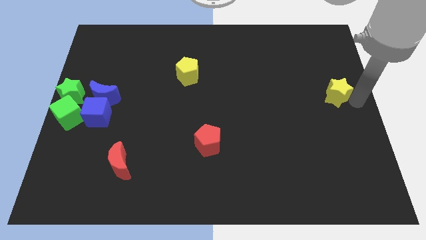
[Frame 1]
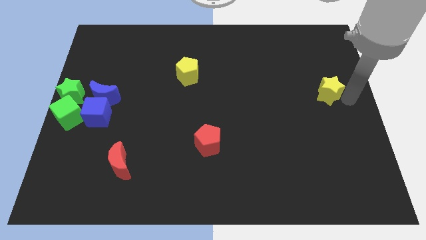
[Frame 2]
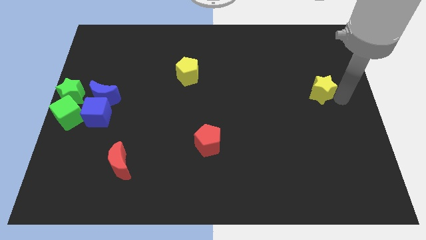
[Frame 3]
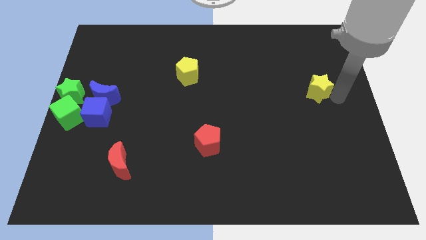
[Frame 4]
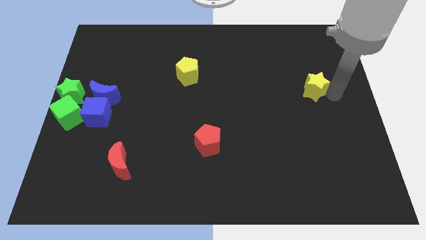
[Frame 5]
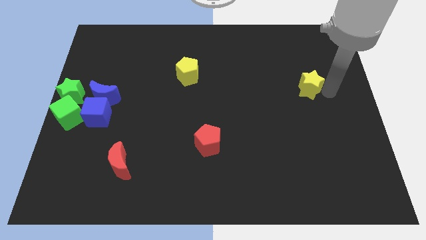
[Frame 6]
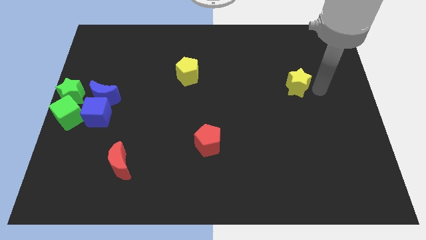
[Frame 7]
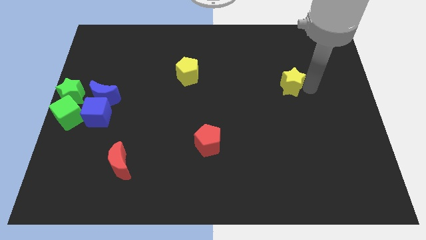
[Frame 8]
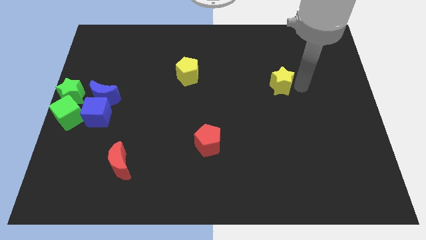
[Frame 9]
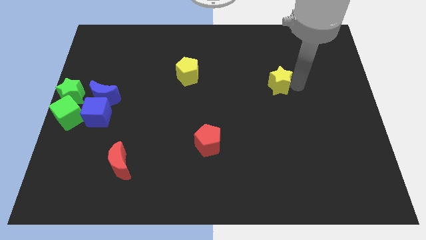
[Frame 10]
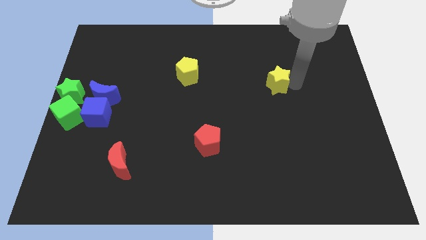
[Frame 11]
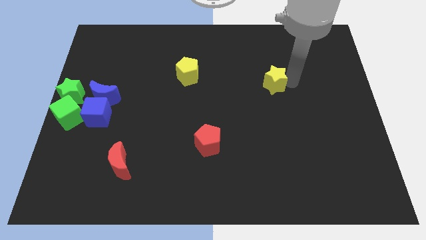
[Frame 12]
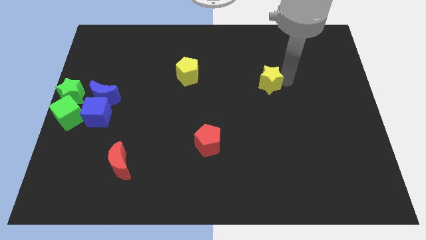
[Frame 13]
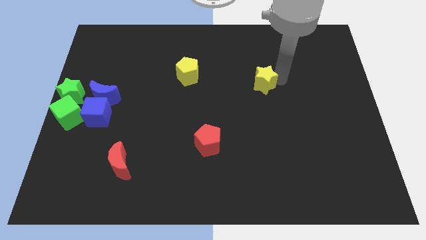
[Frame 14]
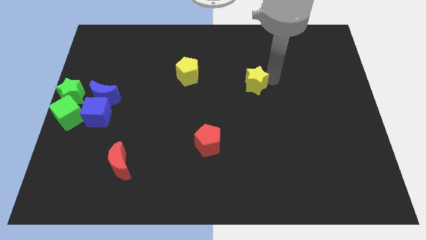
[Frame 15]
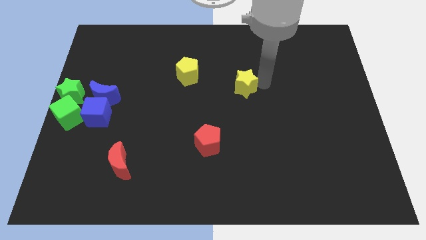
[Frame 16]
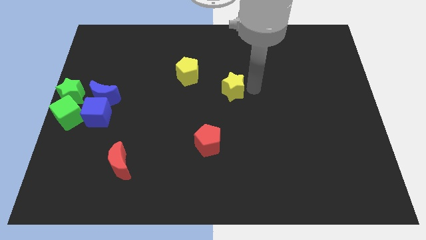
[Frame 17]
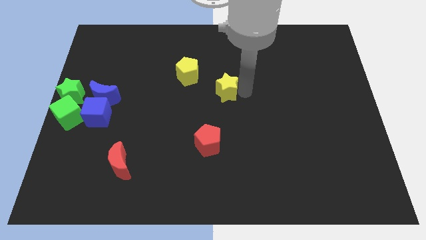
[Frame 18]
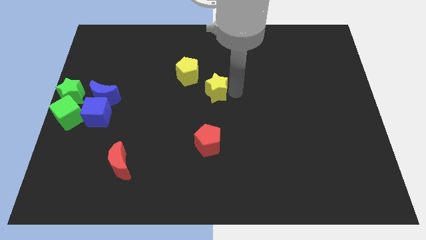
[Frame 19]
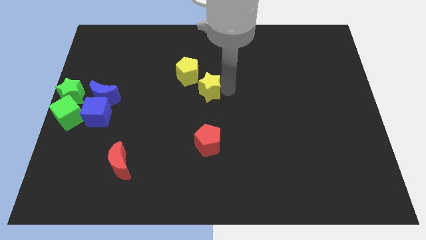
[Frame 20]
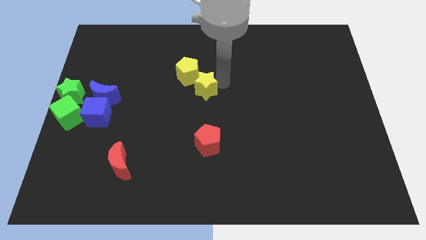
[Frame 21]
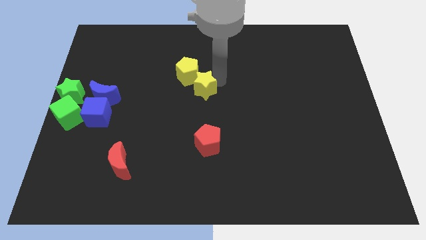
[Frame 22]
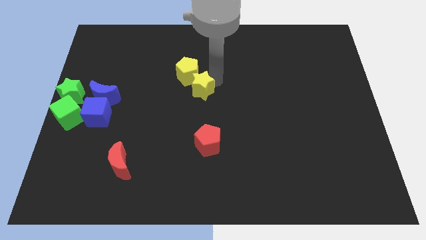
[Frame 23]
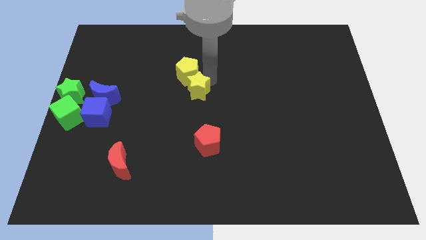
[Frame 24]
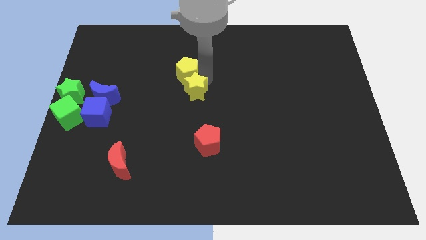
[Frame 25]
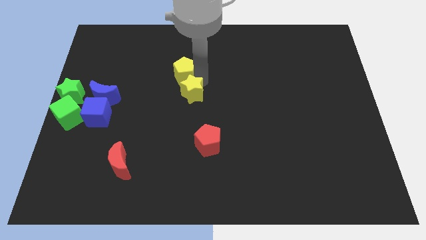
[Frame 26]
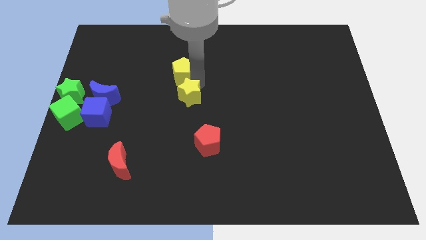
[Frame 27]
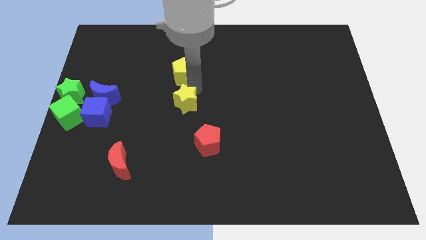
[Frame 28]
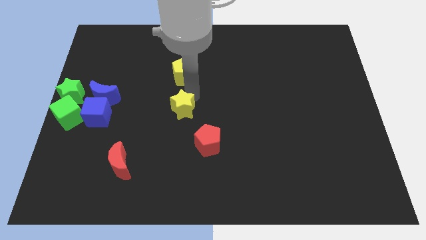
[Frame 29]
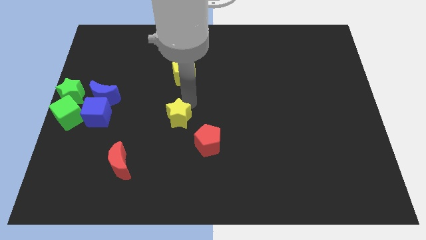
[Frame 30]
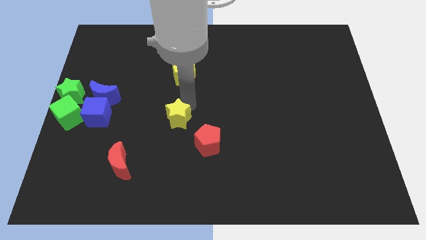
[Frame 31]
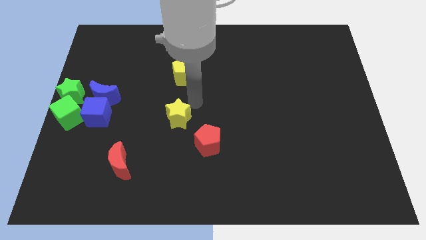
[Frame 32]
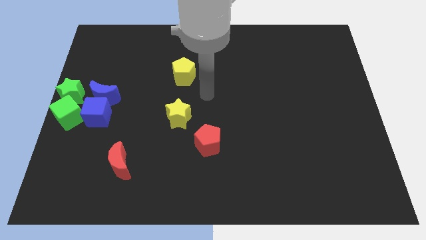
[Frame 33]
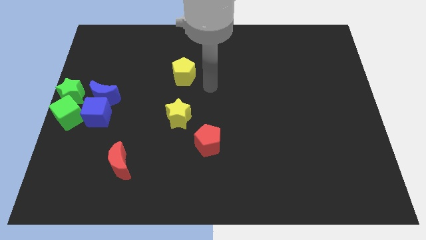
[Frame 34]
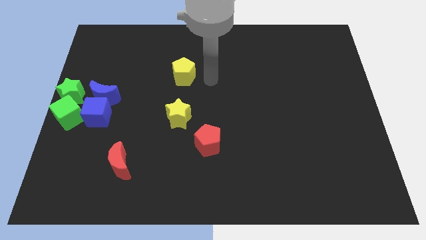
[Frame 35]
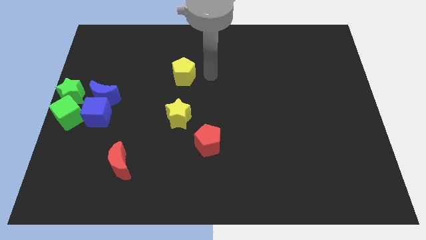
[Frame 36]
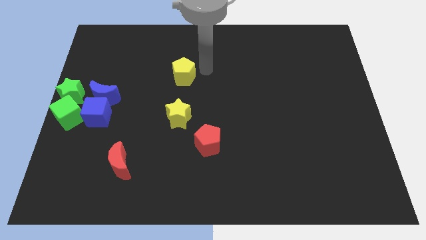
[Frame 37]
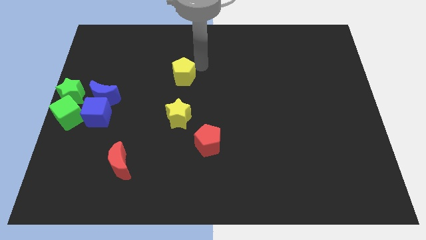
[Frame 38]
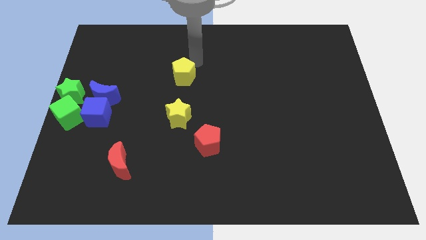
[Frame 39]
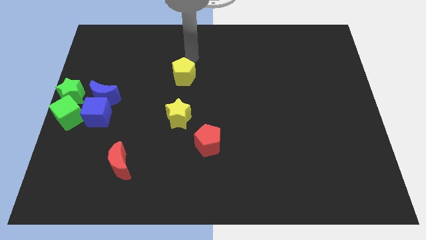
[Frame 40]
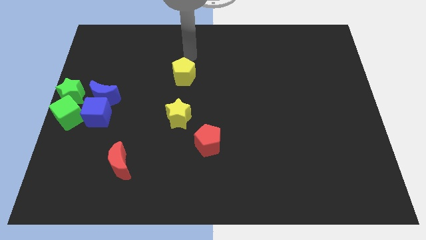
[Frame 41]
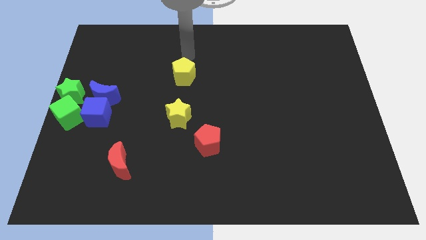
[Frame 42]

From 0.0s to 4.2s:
slide the yellow star towards the top left side of the red pentagon

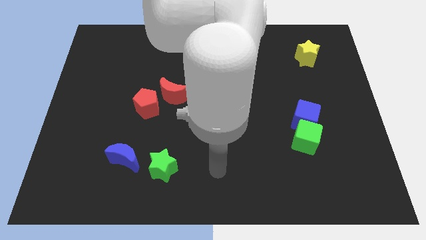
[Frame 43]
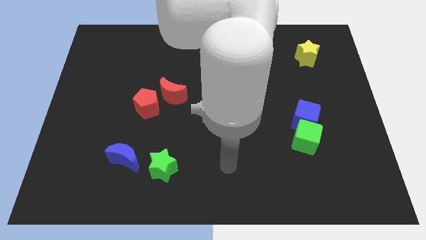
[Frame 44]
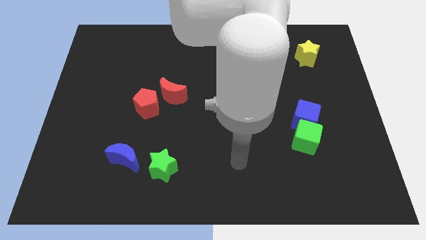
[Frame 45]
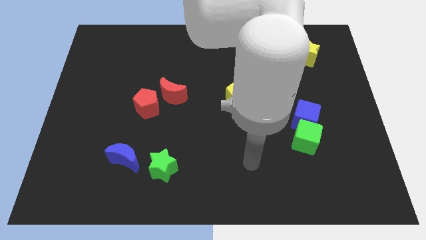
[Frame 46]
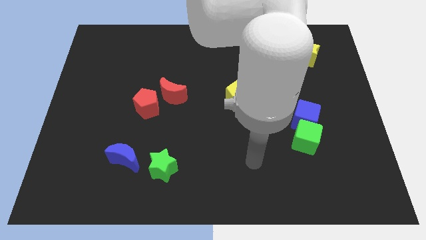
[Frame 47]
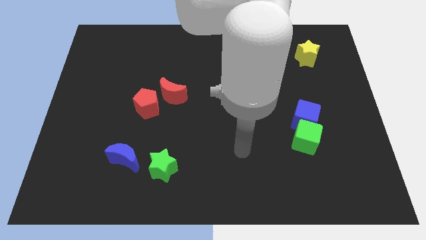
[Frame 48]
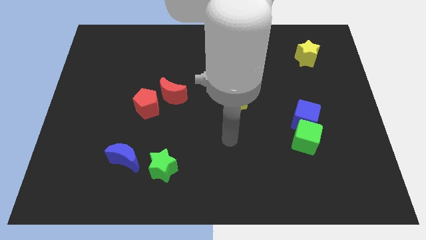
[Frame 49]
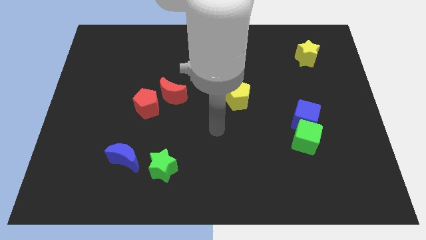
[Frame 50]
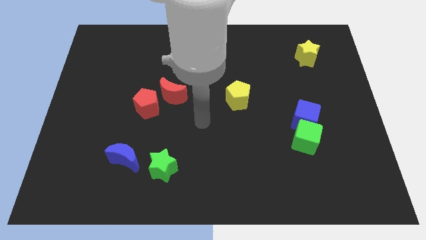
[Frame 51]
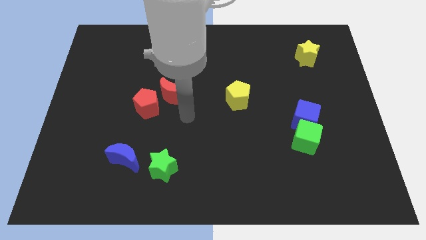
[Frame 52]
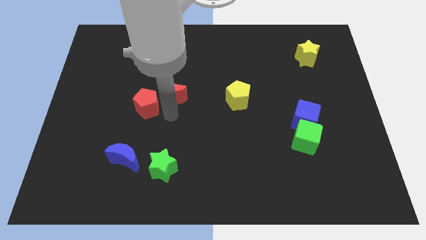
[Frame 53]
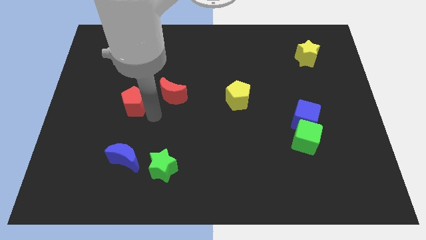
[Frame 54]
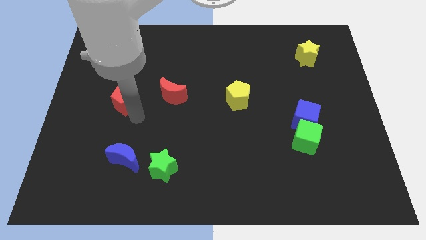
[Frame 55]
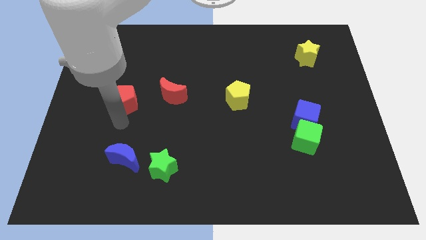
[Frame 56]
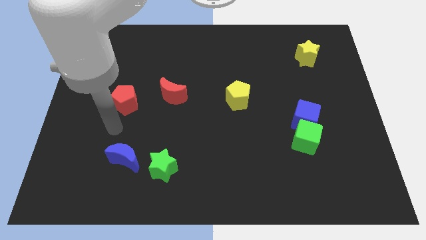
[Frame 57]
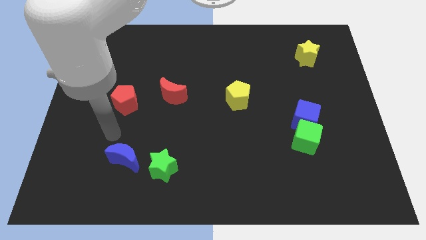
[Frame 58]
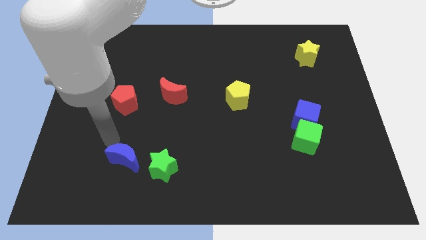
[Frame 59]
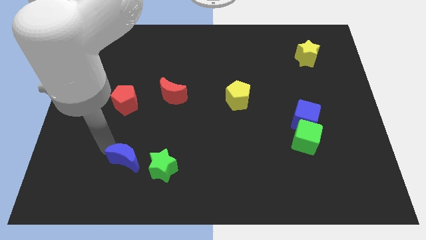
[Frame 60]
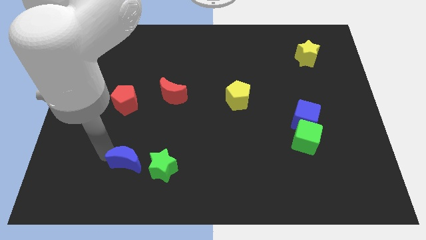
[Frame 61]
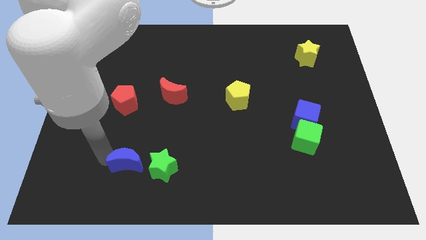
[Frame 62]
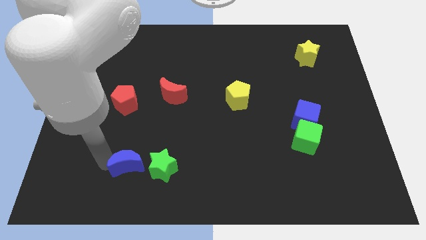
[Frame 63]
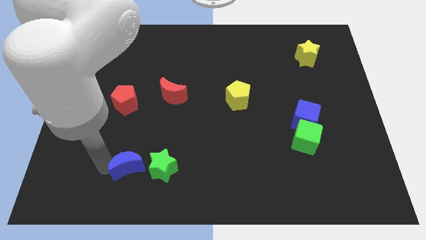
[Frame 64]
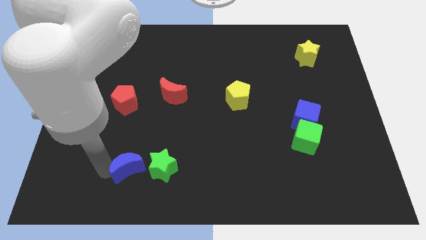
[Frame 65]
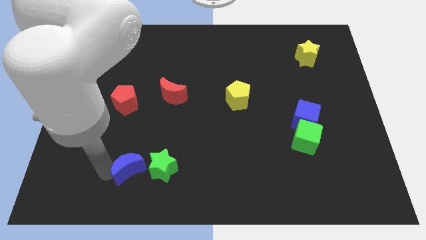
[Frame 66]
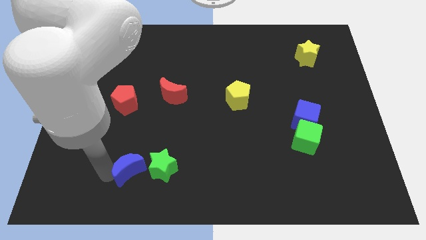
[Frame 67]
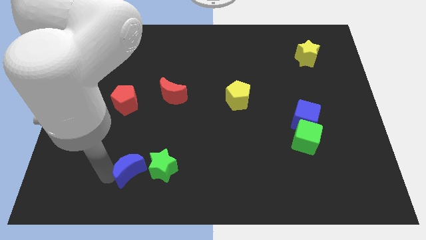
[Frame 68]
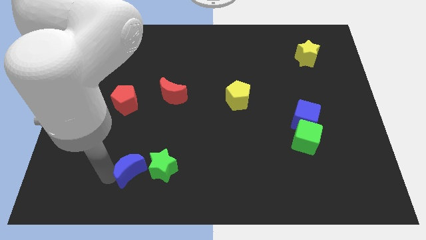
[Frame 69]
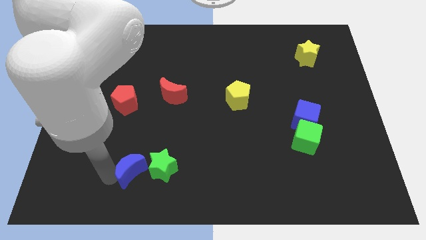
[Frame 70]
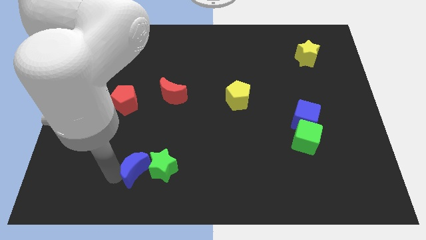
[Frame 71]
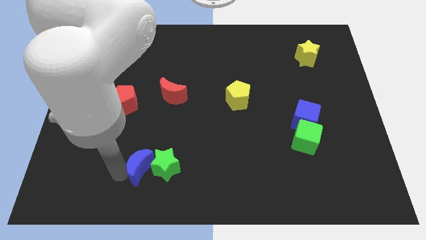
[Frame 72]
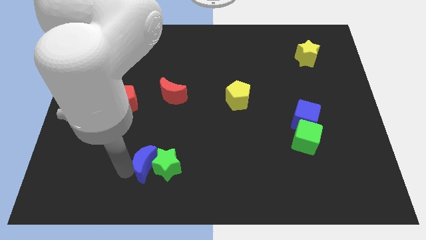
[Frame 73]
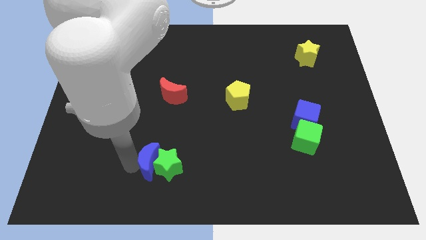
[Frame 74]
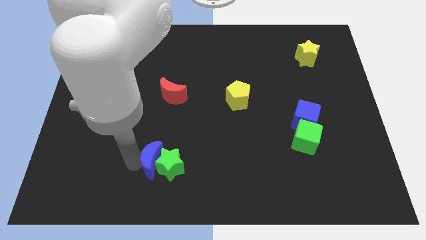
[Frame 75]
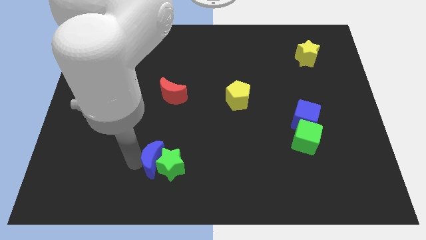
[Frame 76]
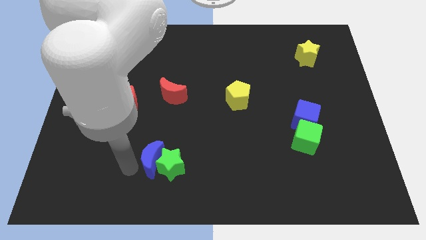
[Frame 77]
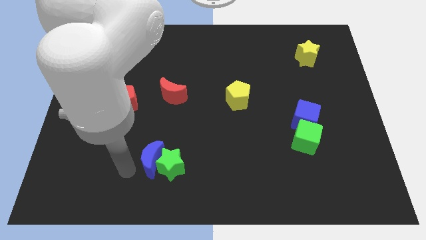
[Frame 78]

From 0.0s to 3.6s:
move the blue crescent green star and red pentagon diagonal to each other

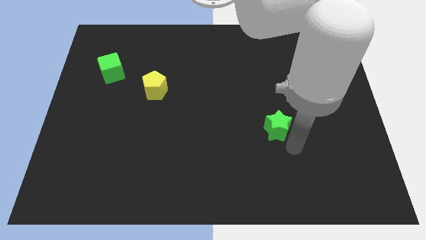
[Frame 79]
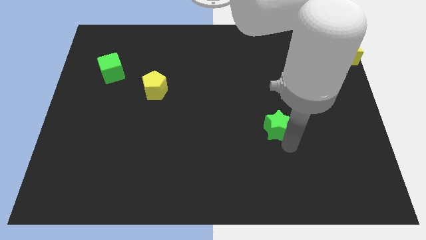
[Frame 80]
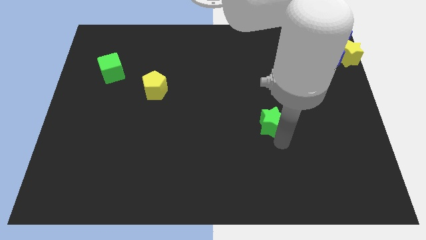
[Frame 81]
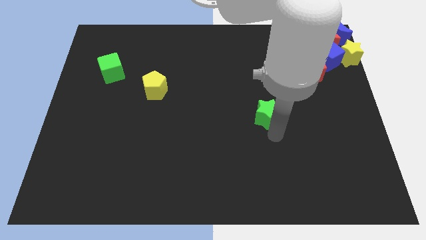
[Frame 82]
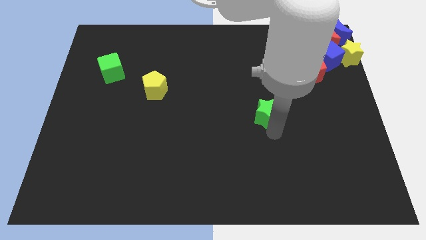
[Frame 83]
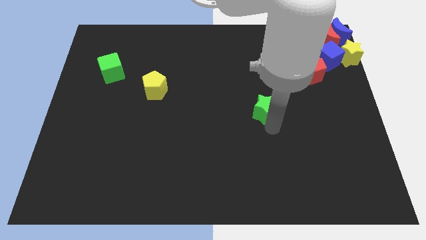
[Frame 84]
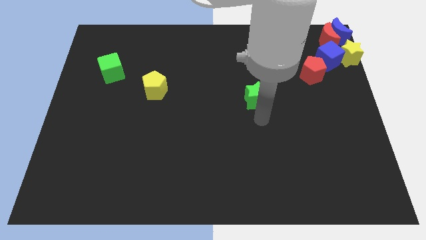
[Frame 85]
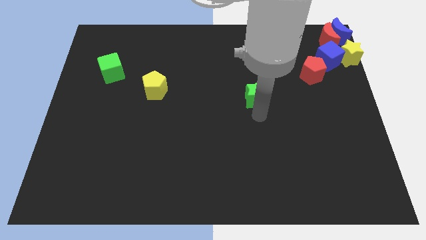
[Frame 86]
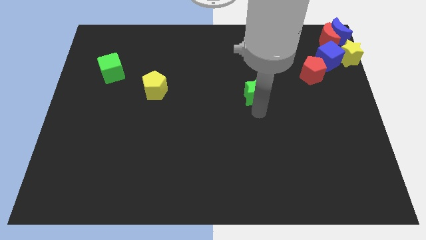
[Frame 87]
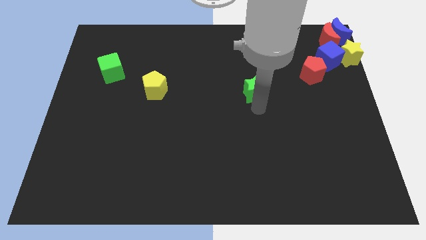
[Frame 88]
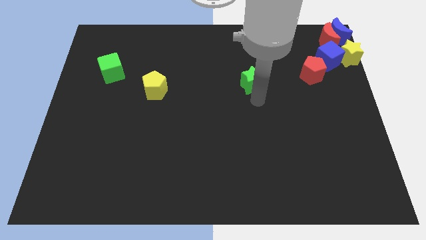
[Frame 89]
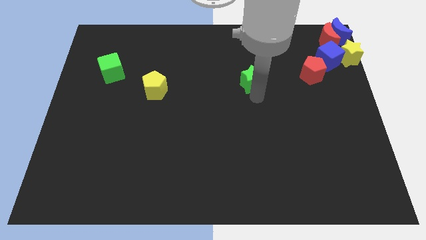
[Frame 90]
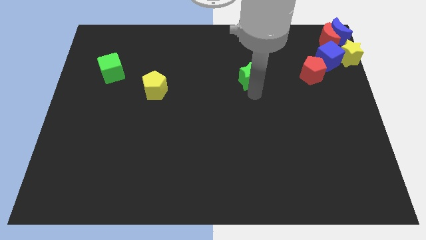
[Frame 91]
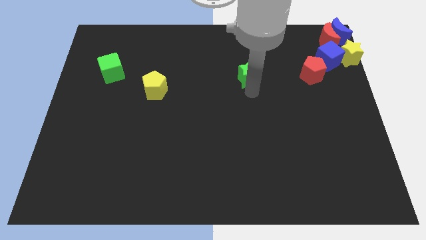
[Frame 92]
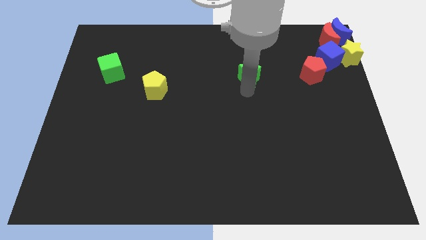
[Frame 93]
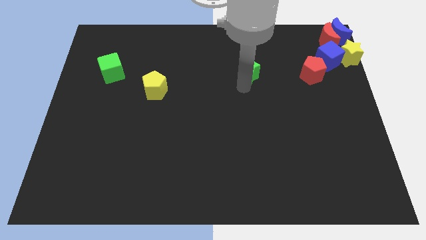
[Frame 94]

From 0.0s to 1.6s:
place the green star to the left side of the red pentagon
